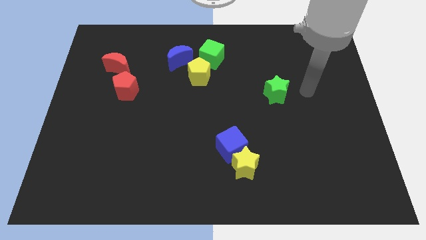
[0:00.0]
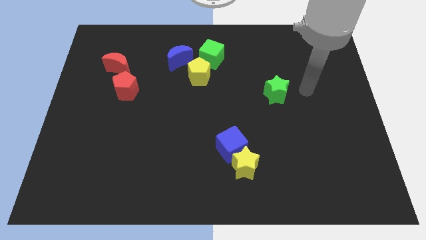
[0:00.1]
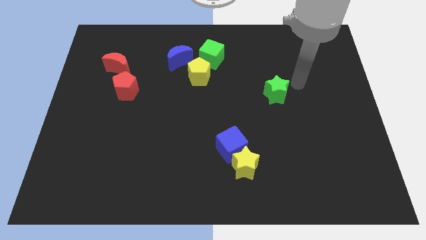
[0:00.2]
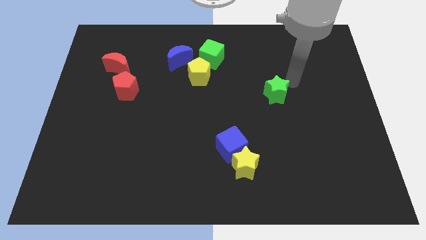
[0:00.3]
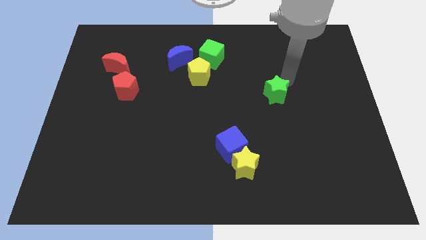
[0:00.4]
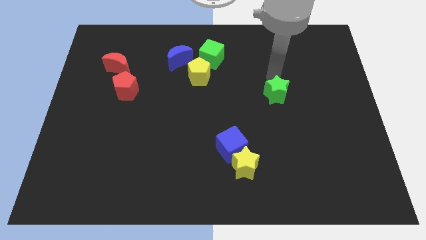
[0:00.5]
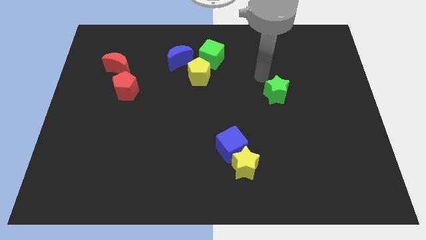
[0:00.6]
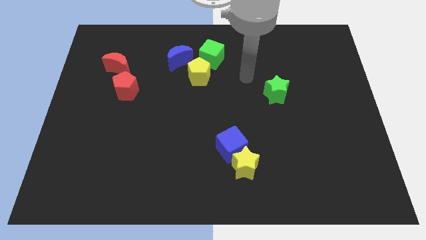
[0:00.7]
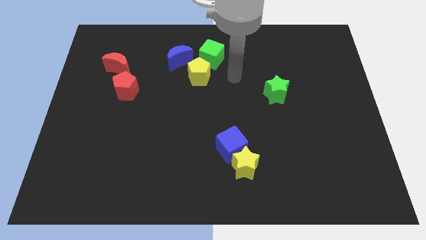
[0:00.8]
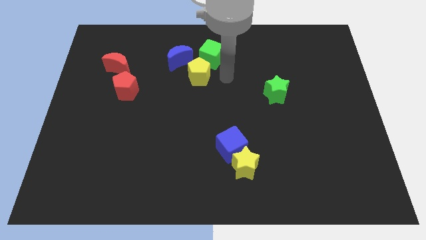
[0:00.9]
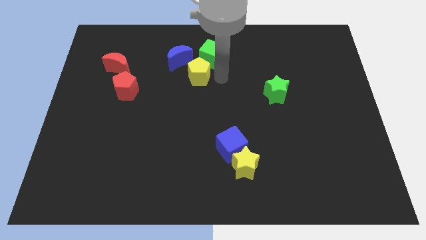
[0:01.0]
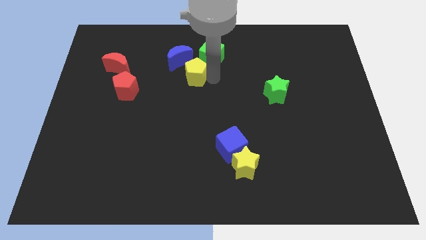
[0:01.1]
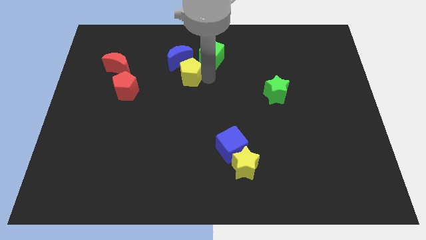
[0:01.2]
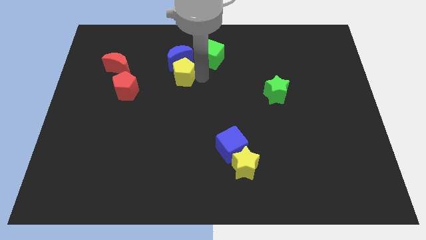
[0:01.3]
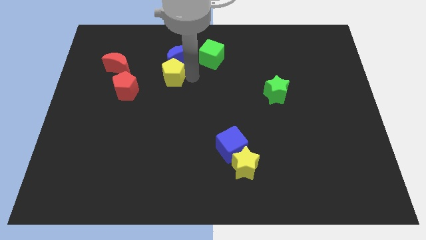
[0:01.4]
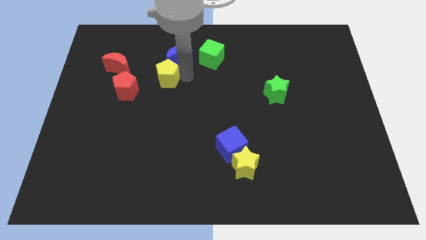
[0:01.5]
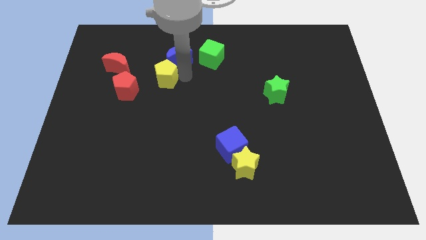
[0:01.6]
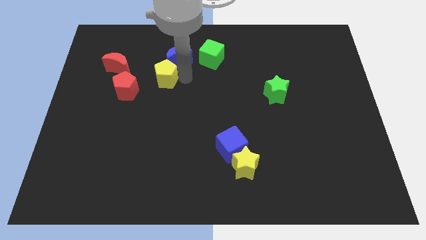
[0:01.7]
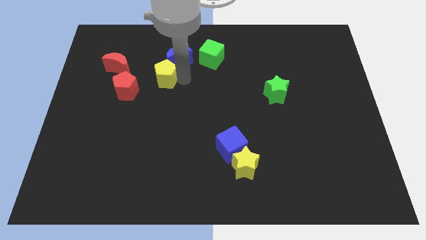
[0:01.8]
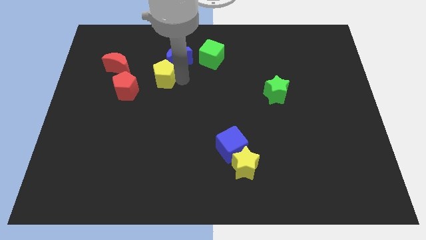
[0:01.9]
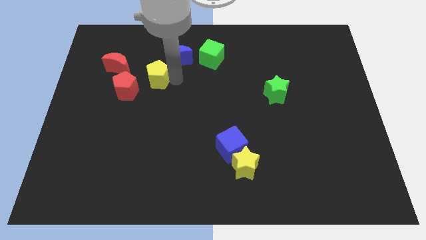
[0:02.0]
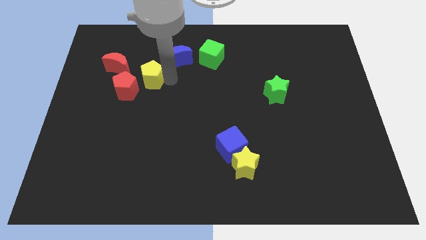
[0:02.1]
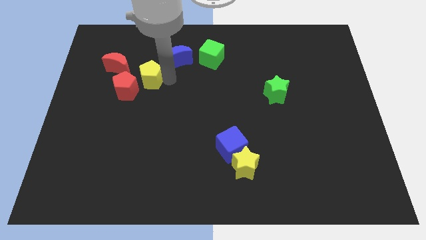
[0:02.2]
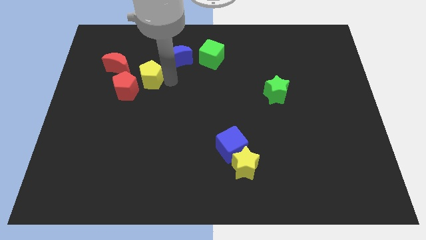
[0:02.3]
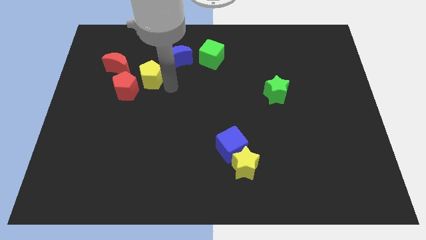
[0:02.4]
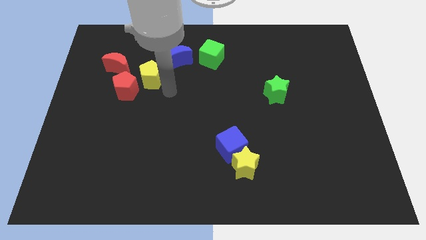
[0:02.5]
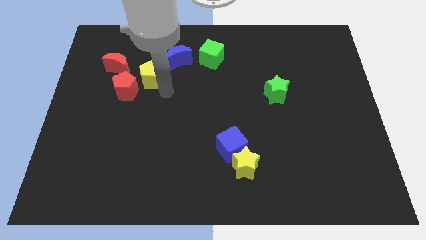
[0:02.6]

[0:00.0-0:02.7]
move the yellow pentagon to the top right side of the red pentagon

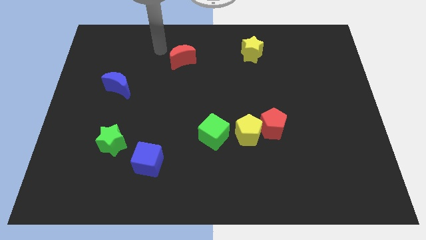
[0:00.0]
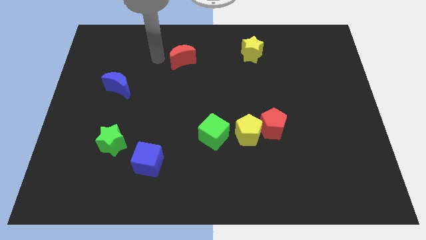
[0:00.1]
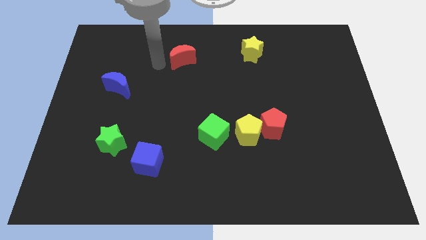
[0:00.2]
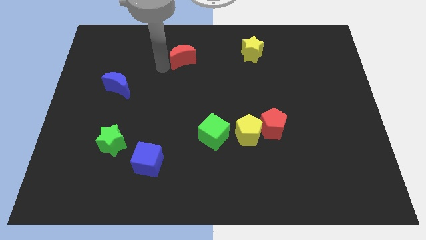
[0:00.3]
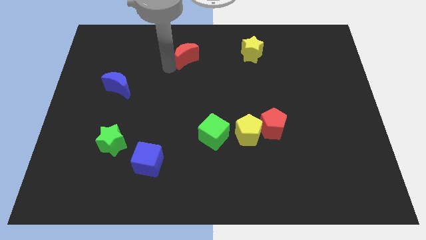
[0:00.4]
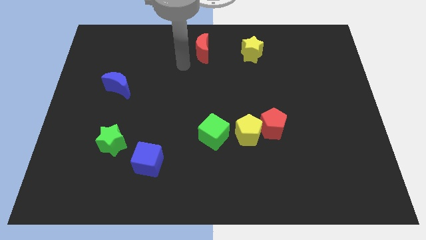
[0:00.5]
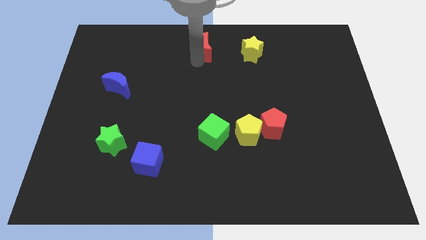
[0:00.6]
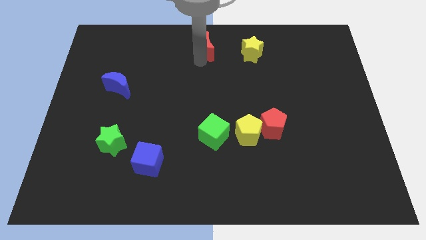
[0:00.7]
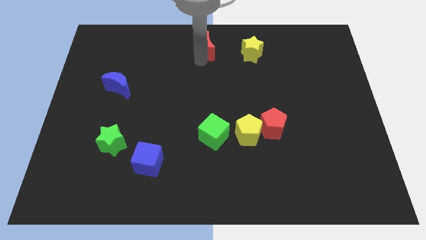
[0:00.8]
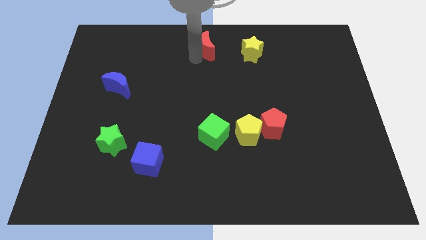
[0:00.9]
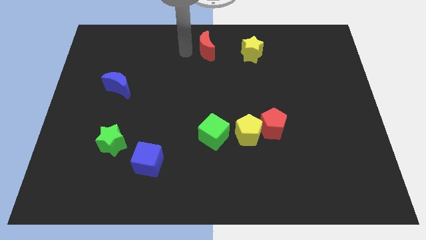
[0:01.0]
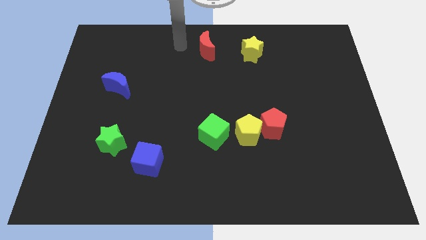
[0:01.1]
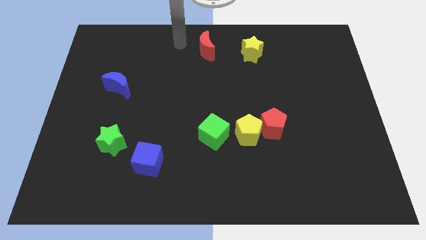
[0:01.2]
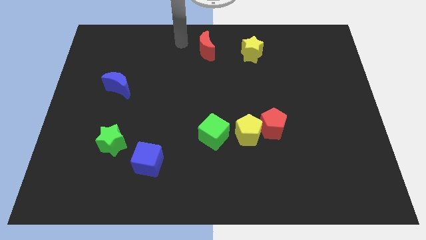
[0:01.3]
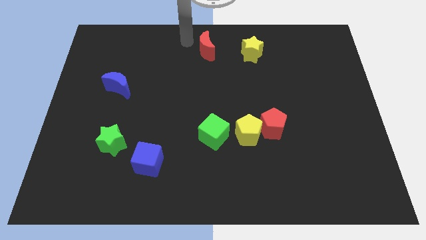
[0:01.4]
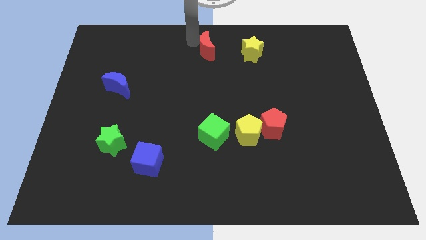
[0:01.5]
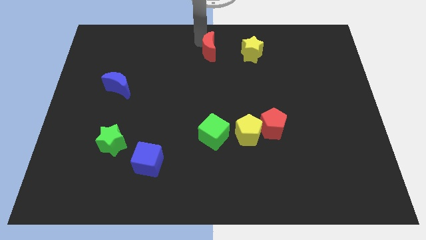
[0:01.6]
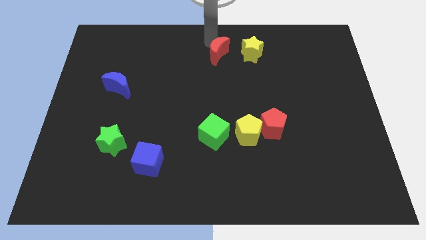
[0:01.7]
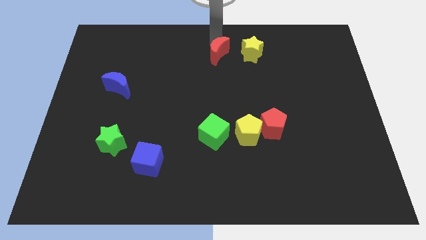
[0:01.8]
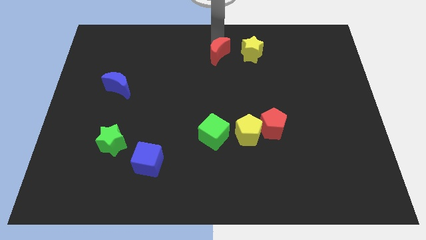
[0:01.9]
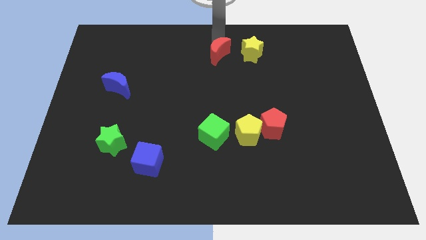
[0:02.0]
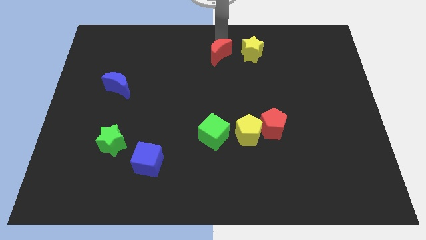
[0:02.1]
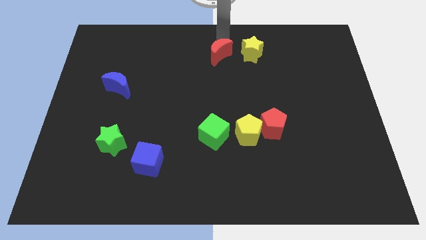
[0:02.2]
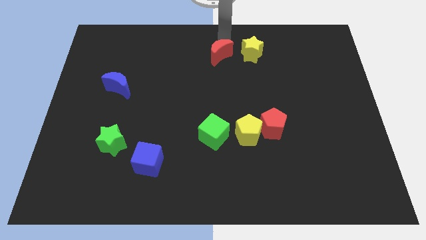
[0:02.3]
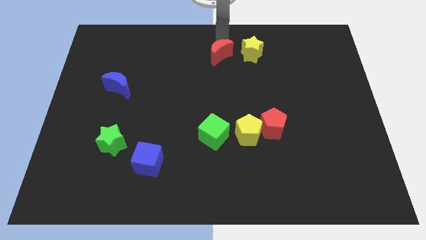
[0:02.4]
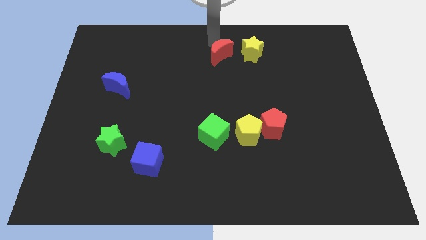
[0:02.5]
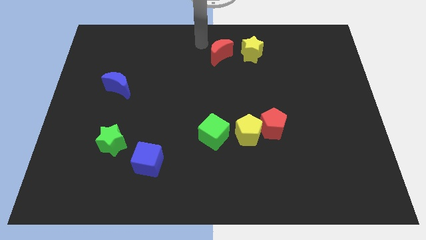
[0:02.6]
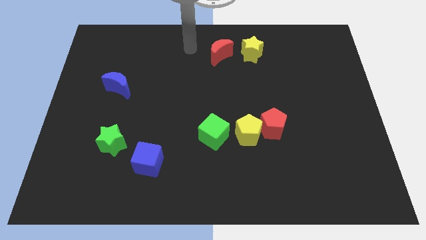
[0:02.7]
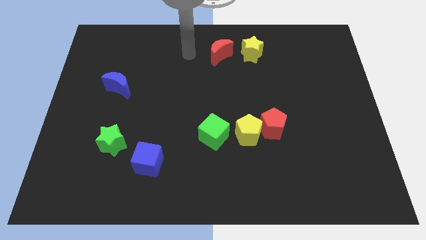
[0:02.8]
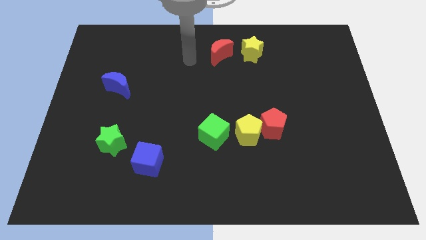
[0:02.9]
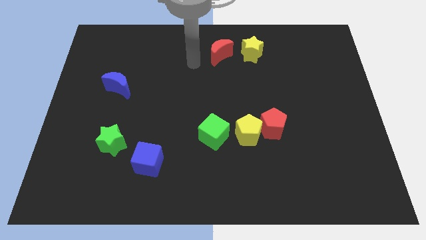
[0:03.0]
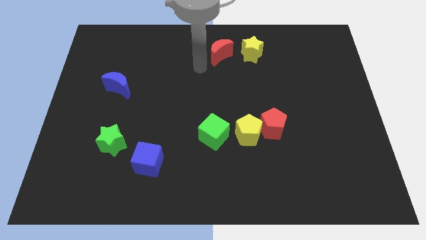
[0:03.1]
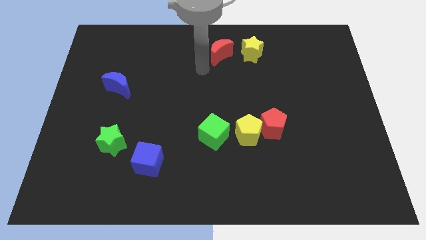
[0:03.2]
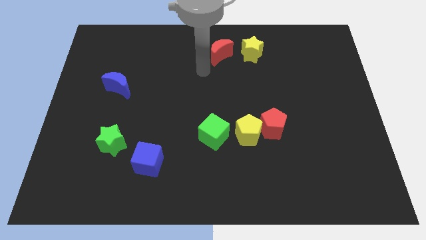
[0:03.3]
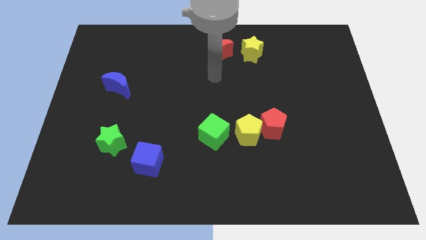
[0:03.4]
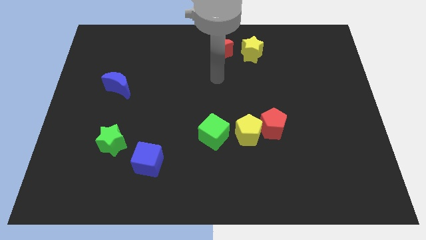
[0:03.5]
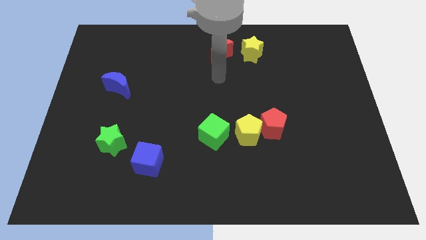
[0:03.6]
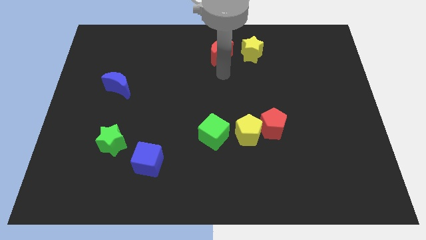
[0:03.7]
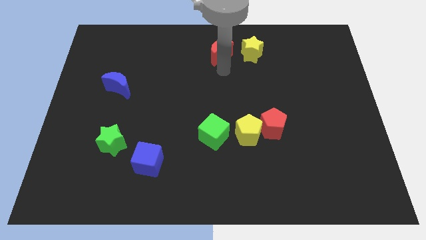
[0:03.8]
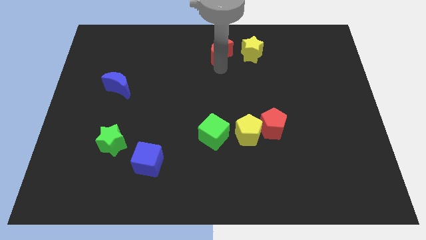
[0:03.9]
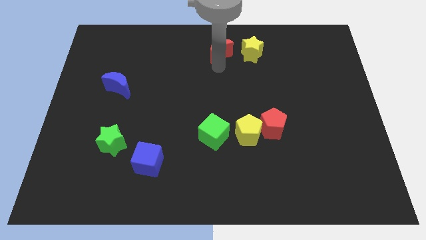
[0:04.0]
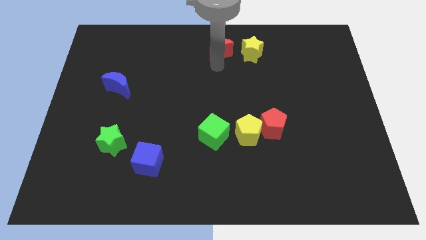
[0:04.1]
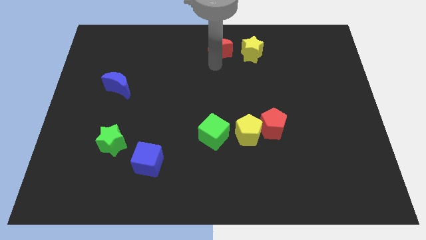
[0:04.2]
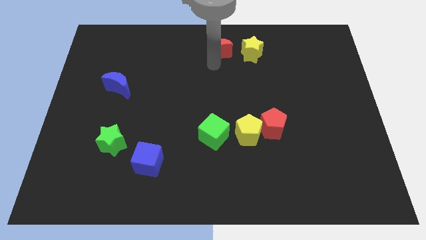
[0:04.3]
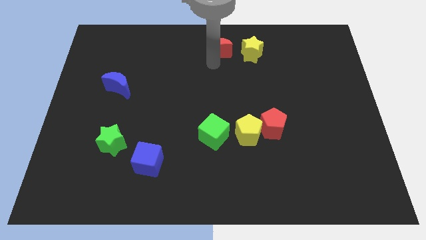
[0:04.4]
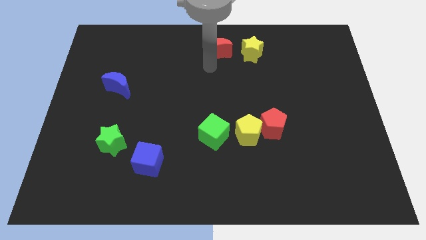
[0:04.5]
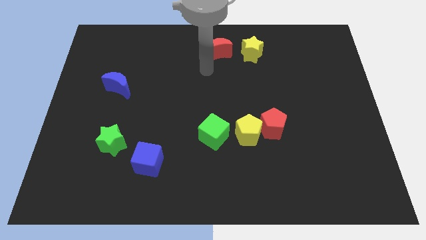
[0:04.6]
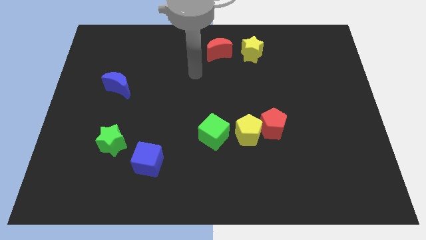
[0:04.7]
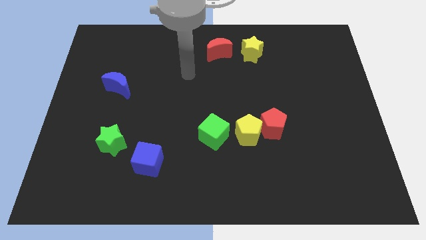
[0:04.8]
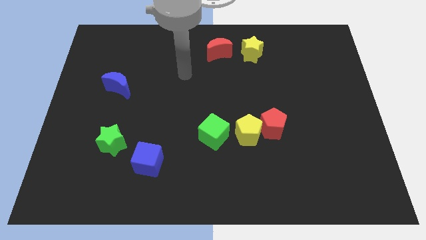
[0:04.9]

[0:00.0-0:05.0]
move the red moon to the top center of the board

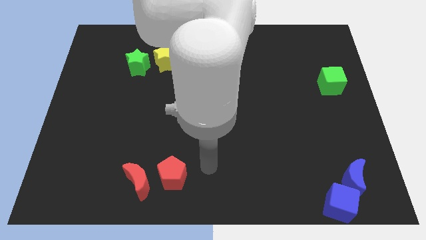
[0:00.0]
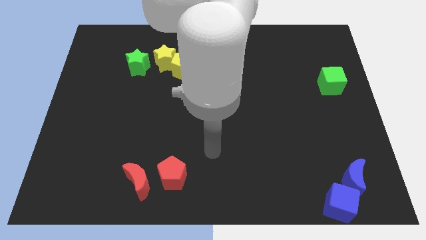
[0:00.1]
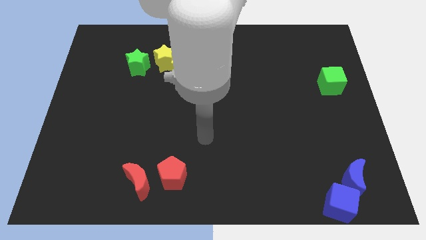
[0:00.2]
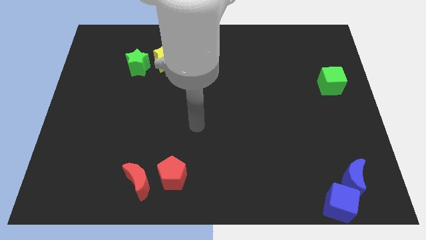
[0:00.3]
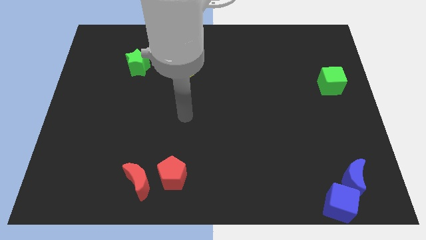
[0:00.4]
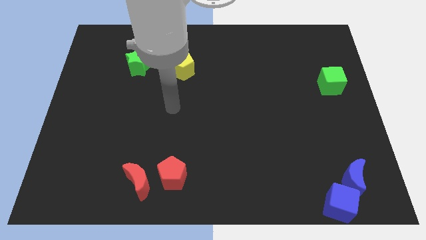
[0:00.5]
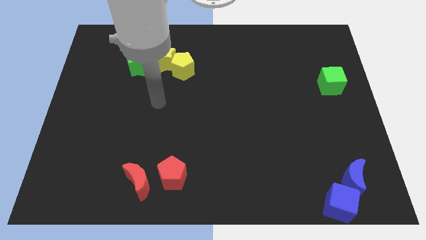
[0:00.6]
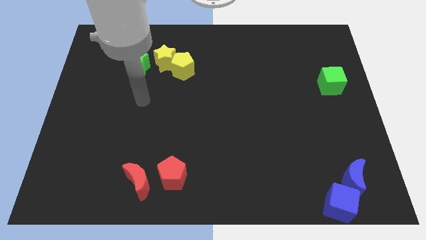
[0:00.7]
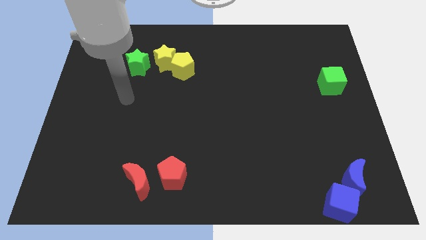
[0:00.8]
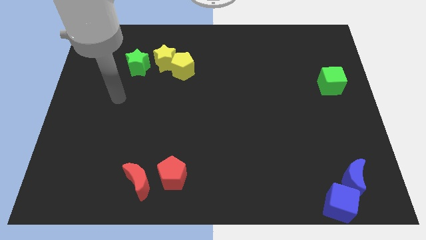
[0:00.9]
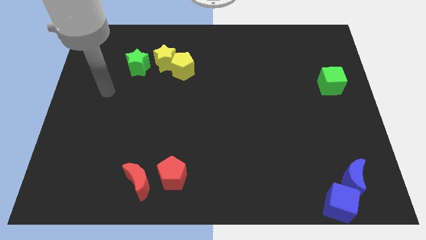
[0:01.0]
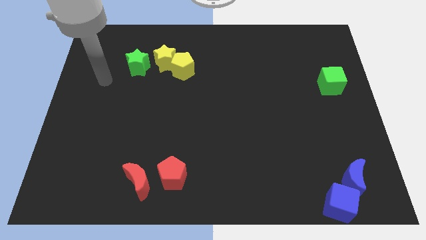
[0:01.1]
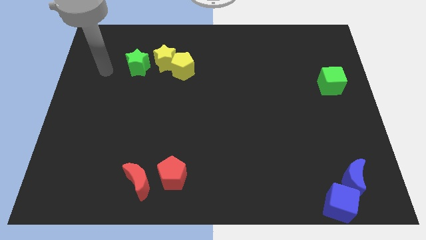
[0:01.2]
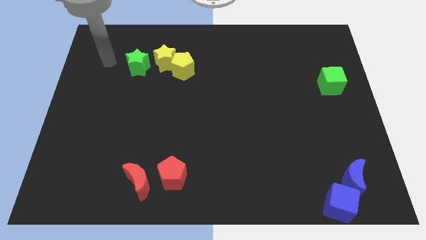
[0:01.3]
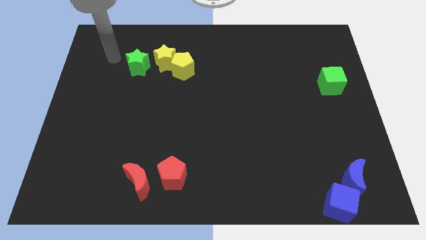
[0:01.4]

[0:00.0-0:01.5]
point the arm to the left of the green star
